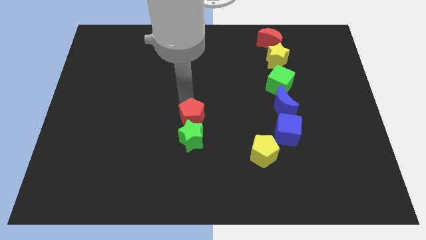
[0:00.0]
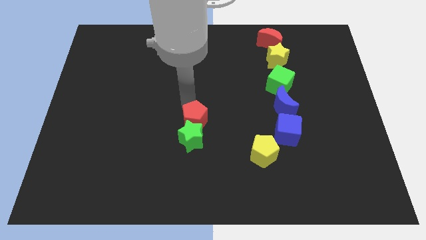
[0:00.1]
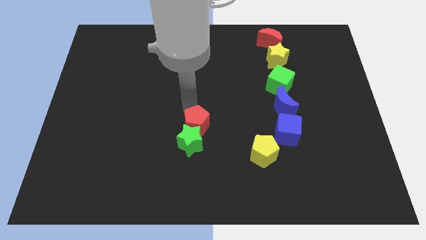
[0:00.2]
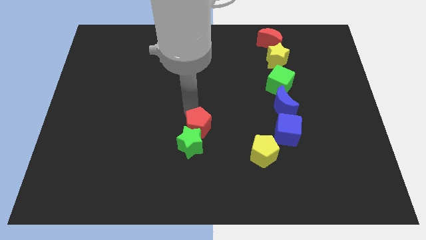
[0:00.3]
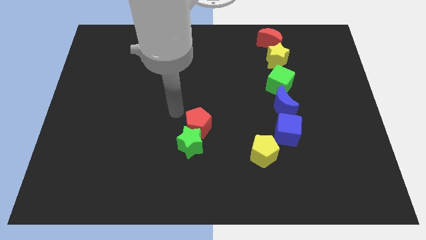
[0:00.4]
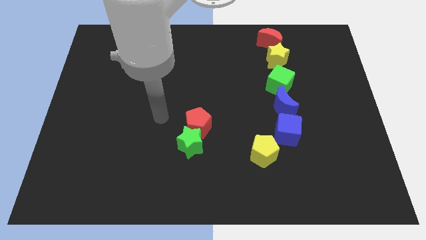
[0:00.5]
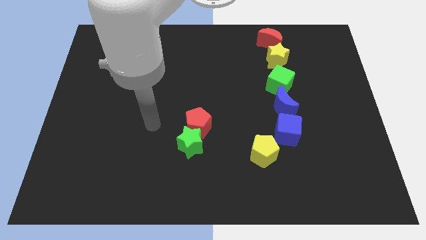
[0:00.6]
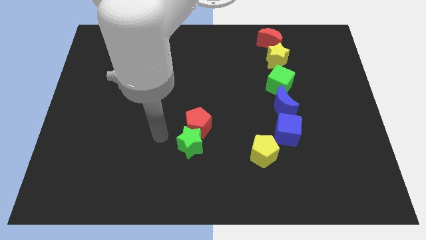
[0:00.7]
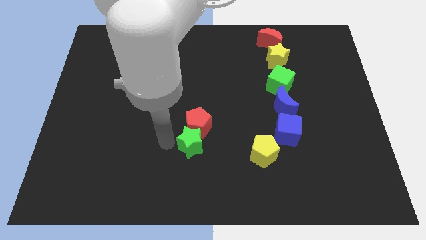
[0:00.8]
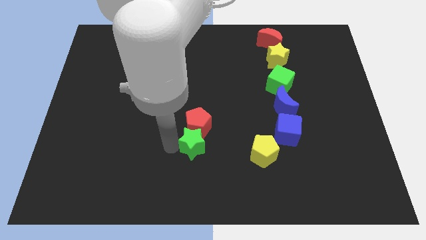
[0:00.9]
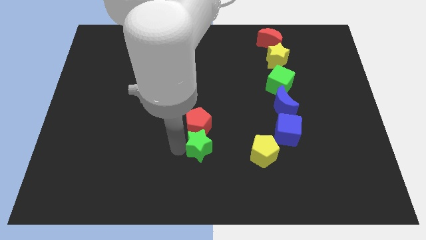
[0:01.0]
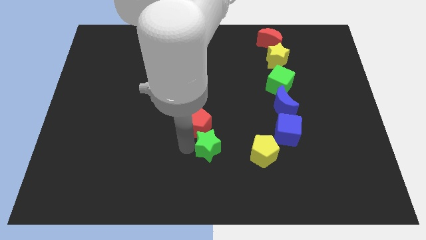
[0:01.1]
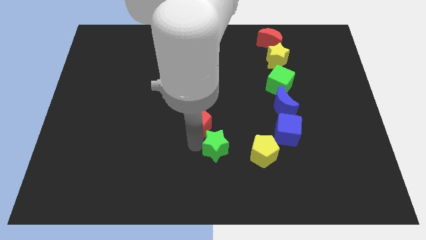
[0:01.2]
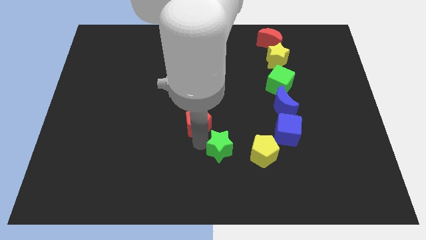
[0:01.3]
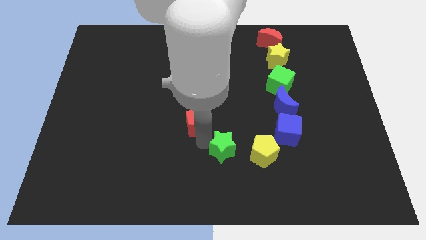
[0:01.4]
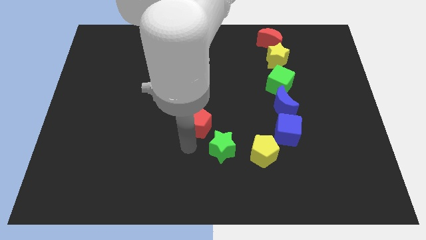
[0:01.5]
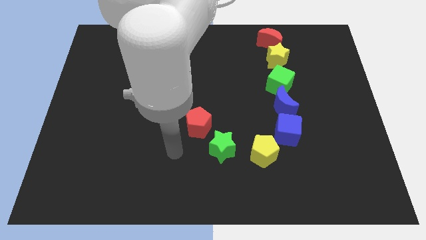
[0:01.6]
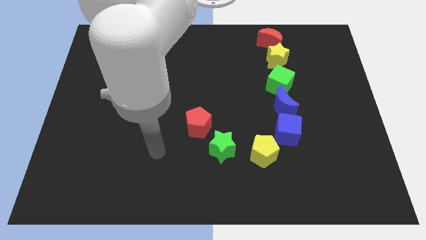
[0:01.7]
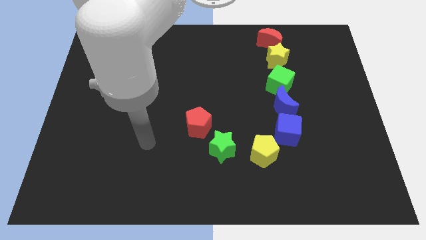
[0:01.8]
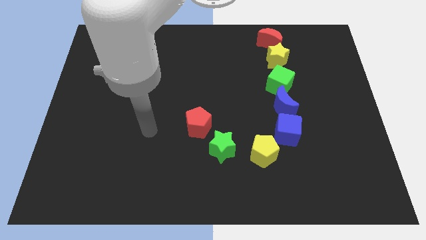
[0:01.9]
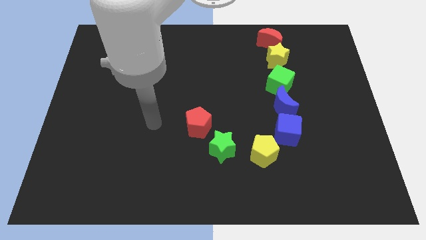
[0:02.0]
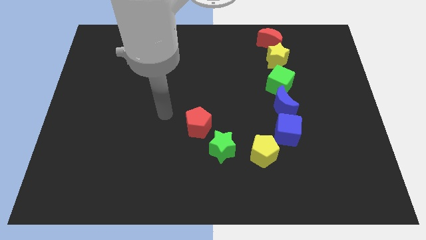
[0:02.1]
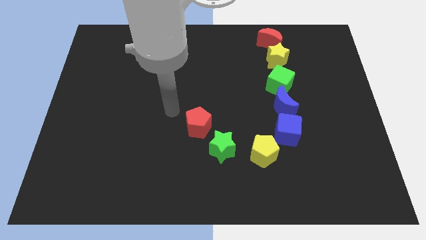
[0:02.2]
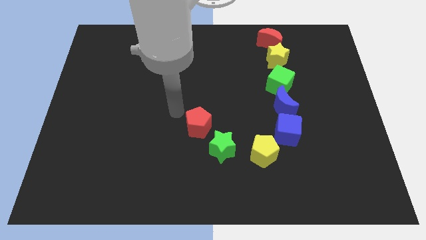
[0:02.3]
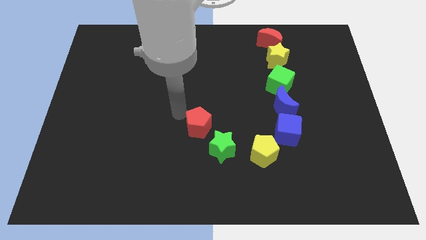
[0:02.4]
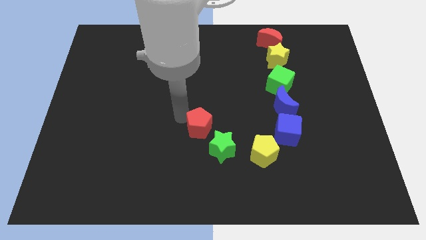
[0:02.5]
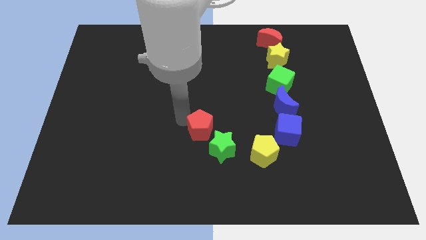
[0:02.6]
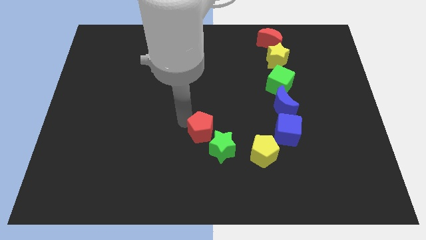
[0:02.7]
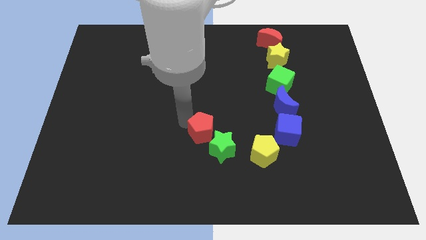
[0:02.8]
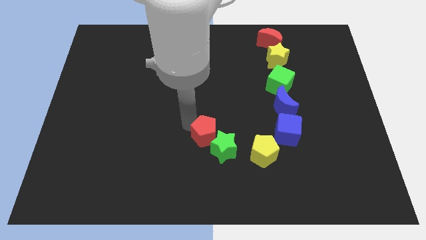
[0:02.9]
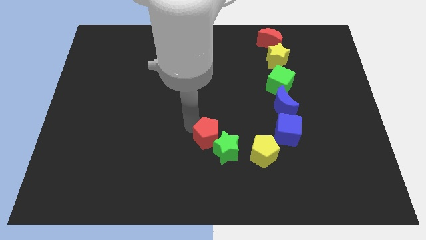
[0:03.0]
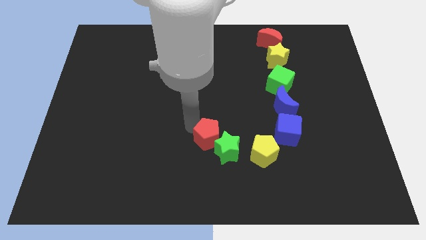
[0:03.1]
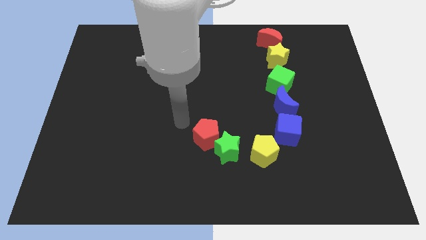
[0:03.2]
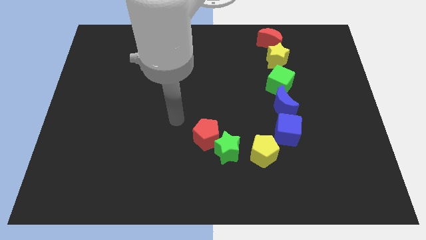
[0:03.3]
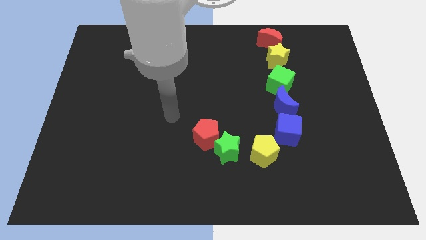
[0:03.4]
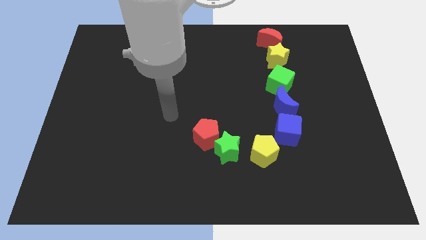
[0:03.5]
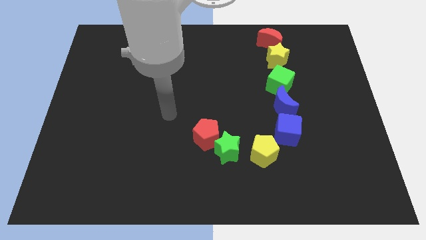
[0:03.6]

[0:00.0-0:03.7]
move the green star close to the yellow pentagon

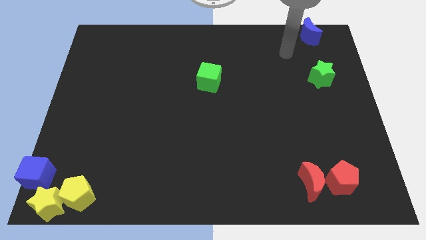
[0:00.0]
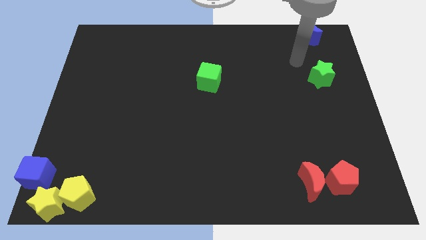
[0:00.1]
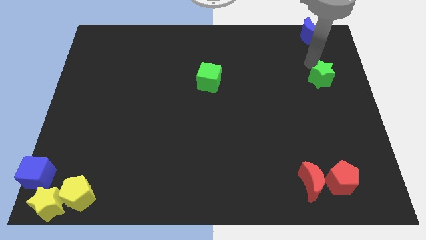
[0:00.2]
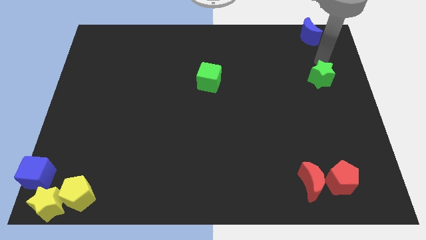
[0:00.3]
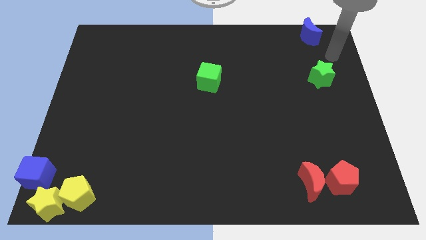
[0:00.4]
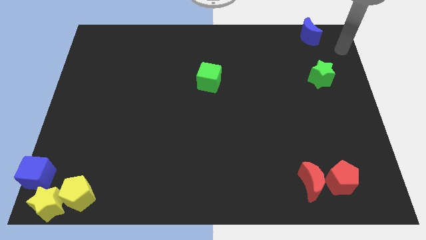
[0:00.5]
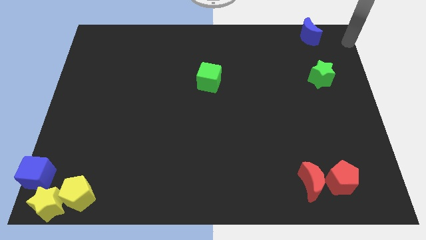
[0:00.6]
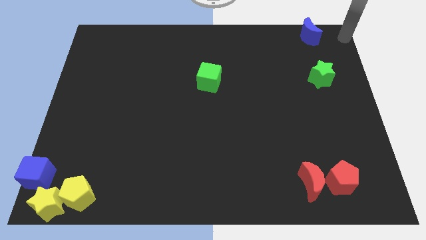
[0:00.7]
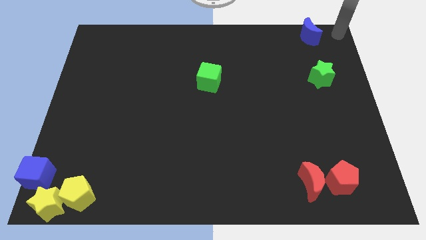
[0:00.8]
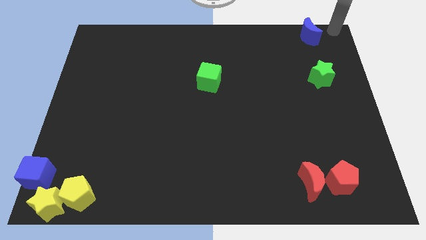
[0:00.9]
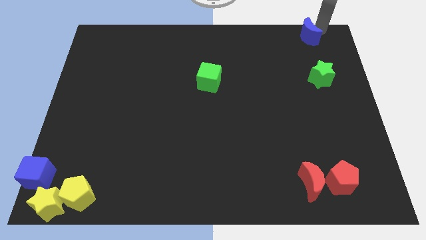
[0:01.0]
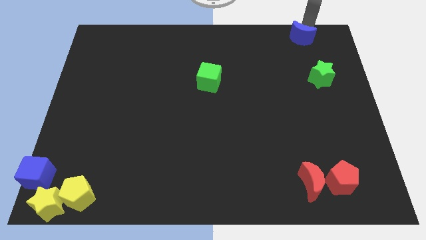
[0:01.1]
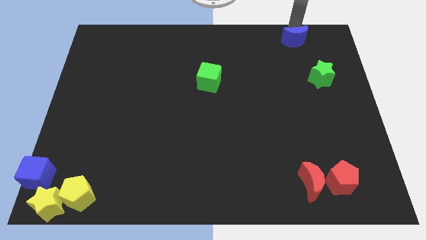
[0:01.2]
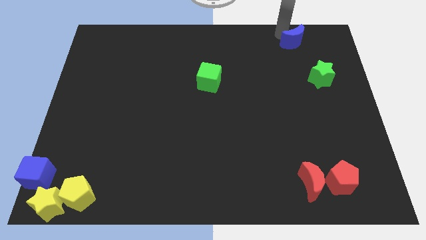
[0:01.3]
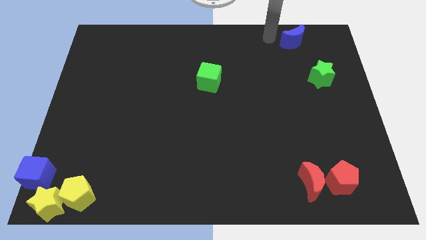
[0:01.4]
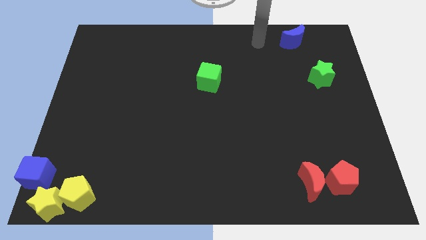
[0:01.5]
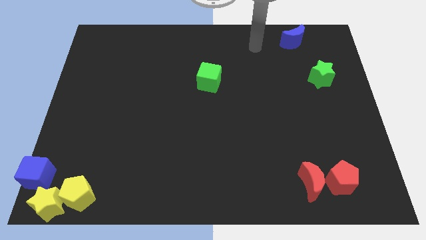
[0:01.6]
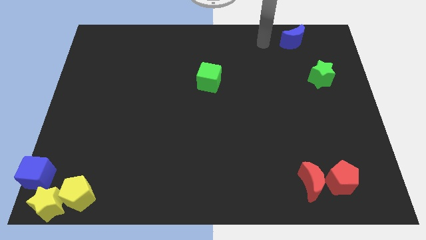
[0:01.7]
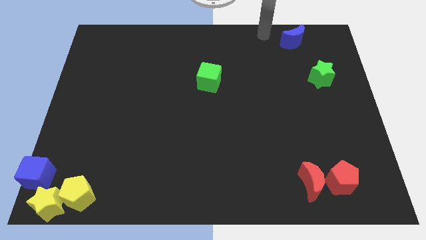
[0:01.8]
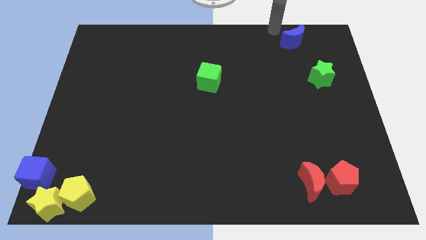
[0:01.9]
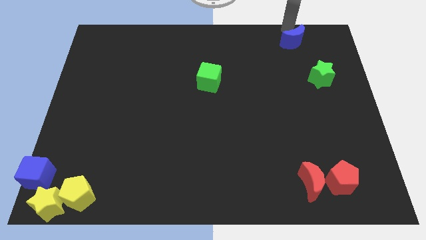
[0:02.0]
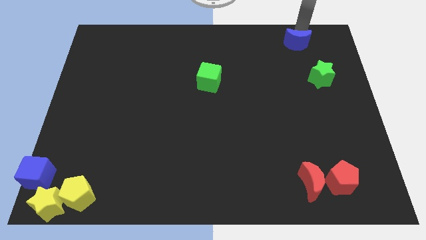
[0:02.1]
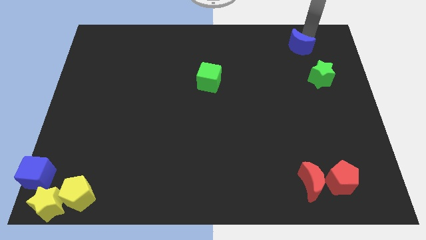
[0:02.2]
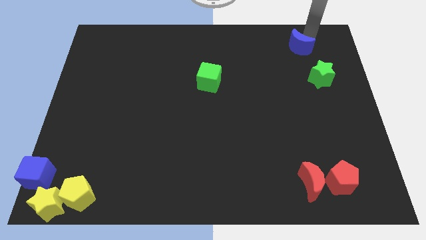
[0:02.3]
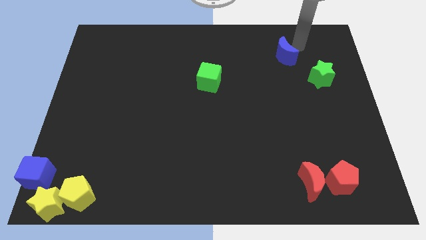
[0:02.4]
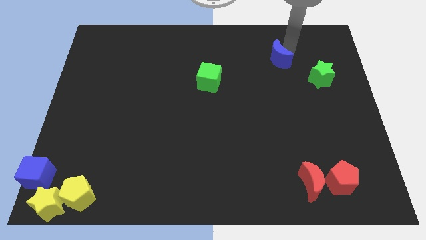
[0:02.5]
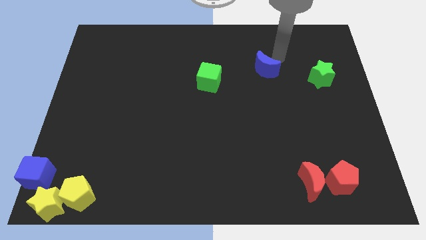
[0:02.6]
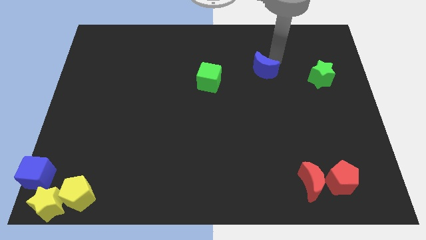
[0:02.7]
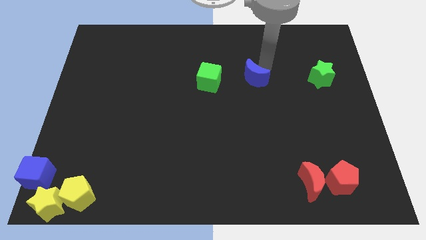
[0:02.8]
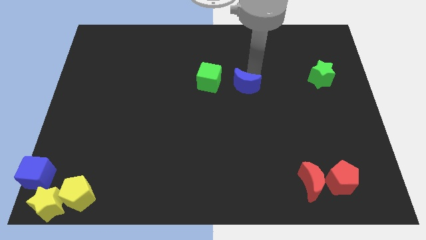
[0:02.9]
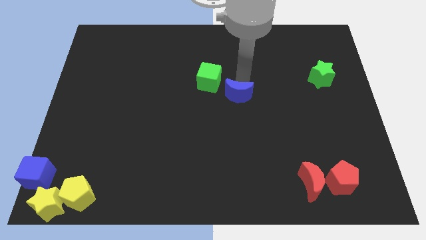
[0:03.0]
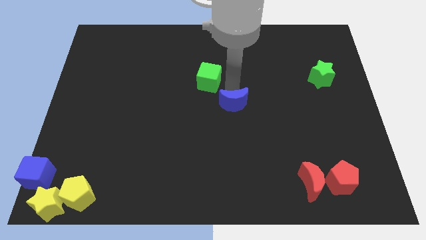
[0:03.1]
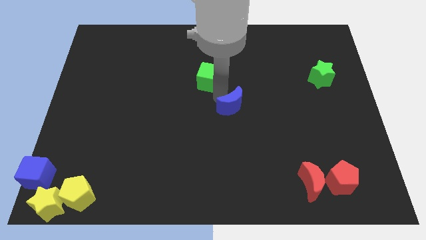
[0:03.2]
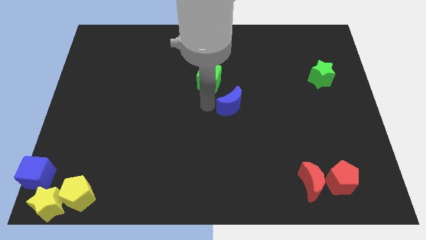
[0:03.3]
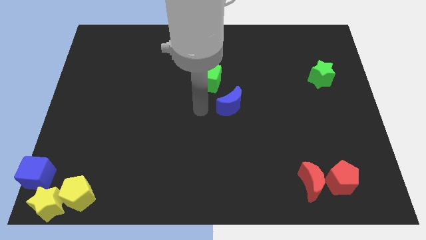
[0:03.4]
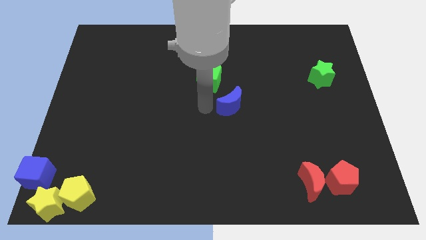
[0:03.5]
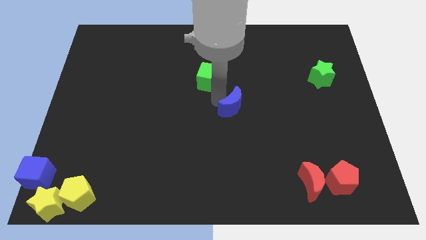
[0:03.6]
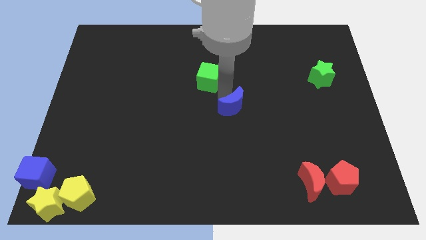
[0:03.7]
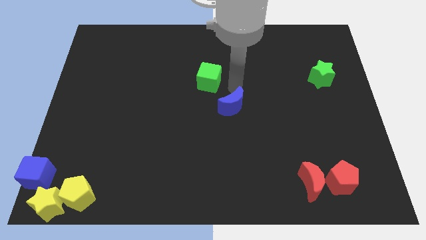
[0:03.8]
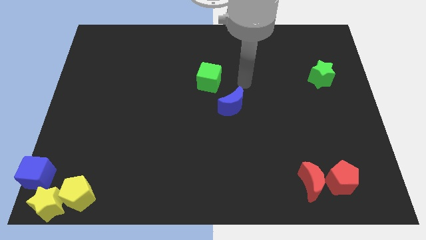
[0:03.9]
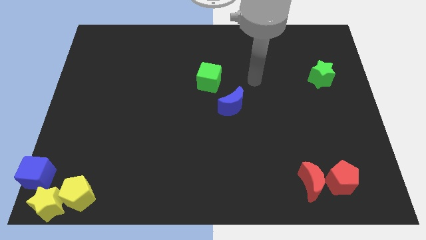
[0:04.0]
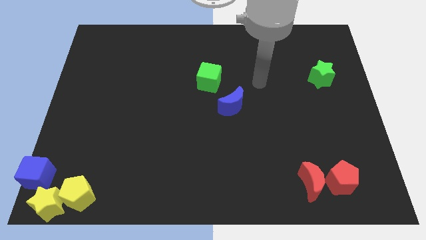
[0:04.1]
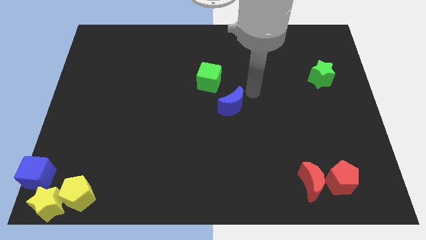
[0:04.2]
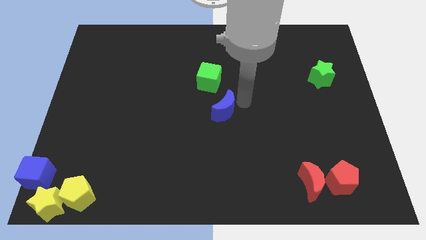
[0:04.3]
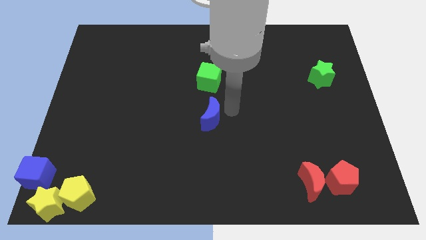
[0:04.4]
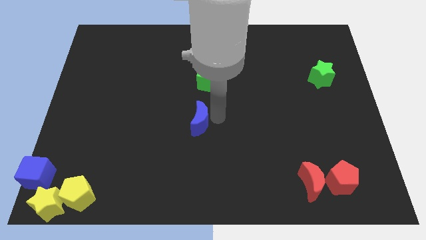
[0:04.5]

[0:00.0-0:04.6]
move the blue crescent to the bottom side of the green cube

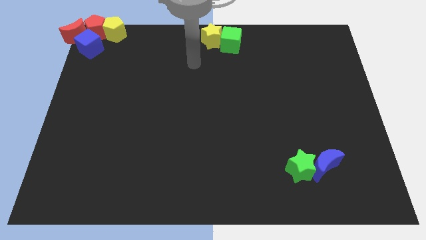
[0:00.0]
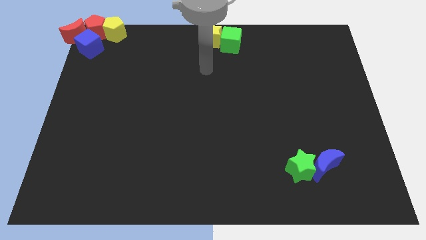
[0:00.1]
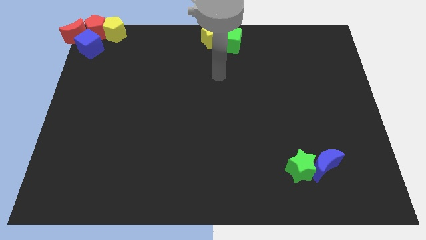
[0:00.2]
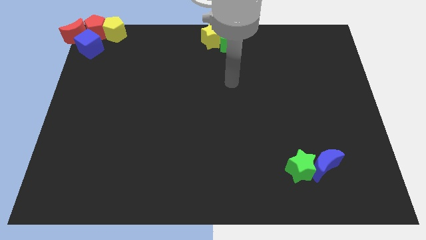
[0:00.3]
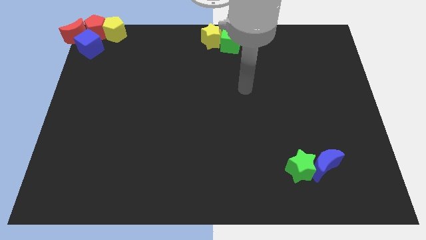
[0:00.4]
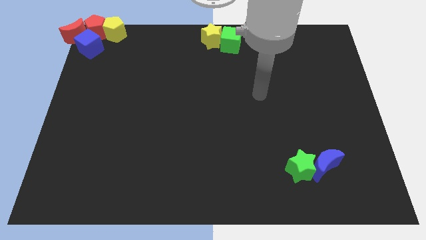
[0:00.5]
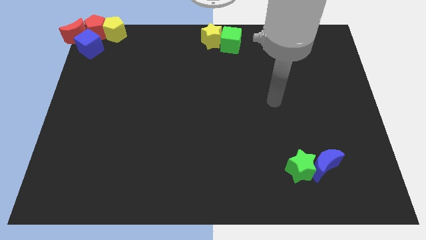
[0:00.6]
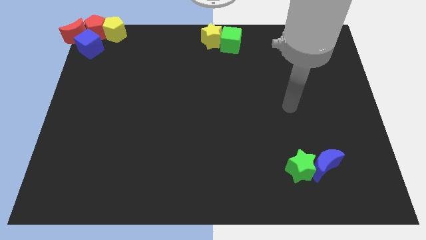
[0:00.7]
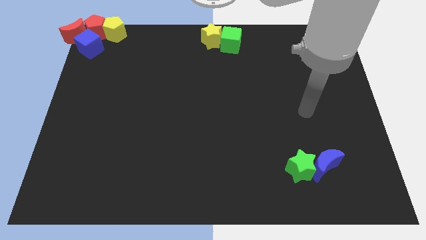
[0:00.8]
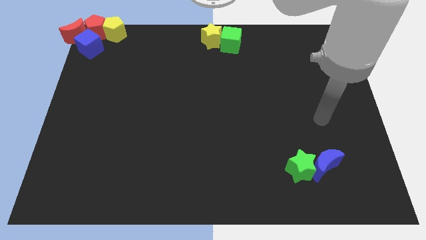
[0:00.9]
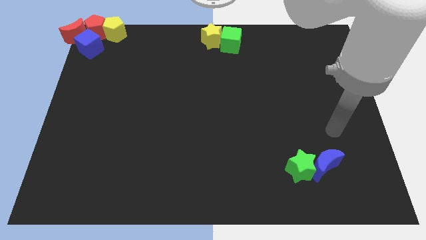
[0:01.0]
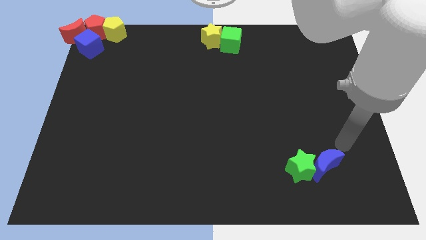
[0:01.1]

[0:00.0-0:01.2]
point your hand at the top right side of the blue moon
